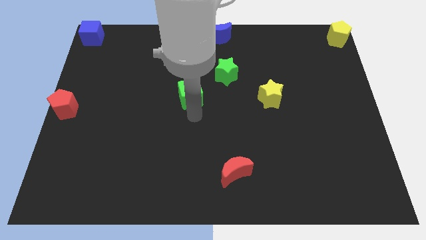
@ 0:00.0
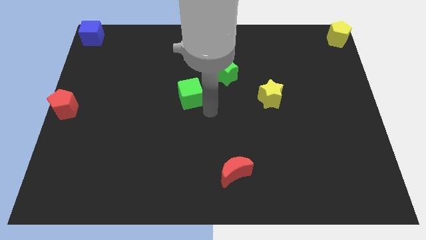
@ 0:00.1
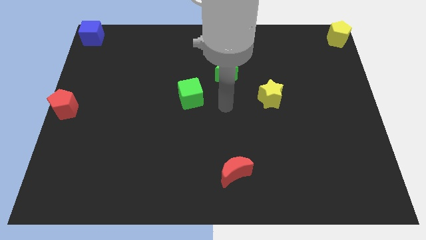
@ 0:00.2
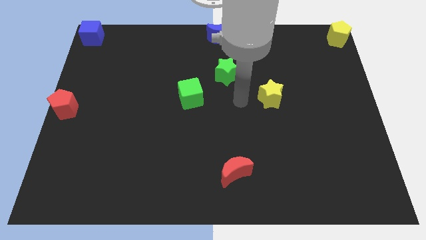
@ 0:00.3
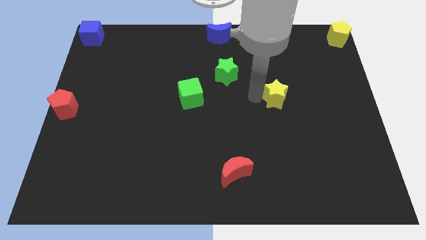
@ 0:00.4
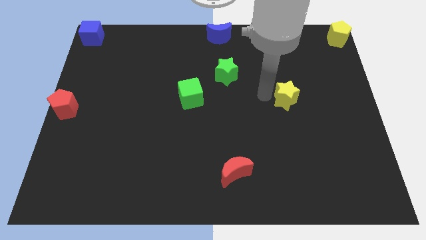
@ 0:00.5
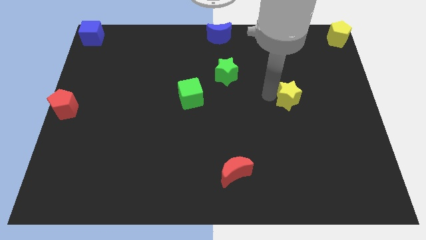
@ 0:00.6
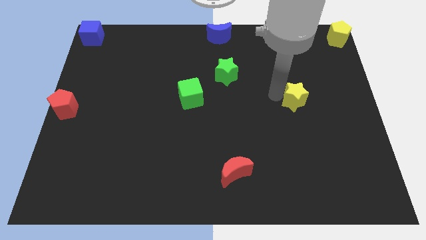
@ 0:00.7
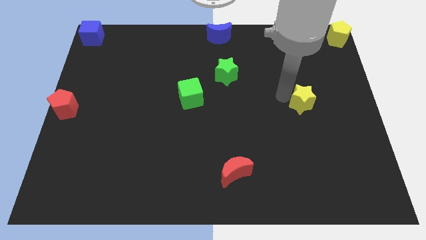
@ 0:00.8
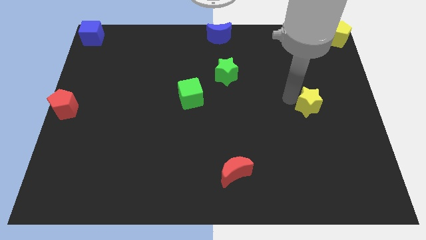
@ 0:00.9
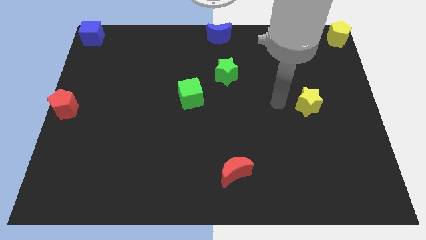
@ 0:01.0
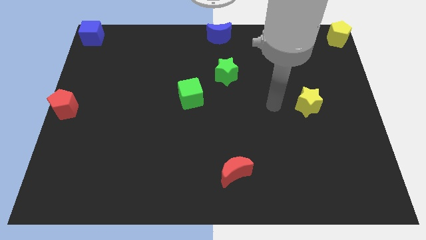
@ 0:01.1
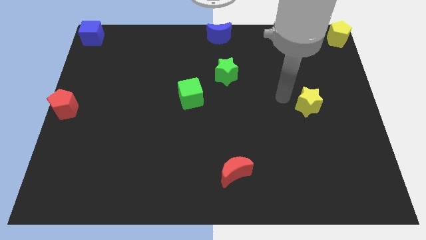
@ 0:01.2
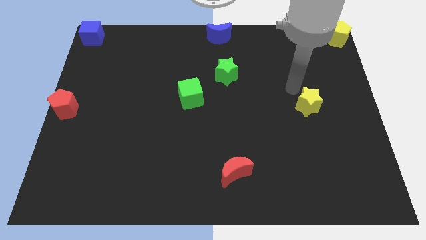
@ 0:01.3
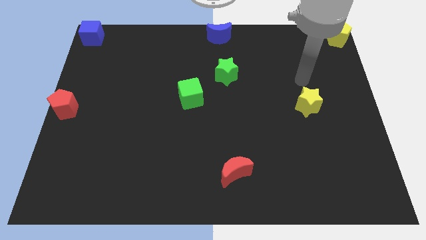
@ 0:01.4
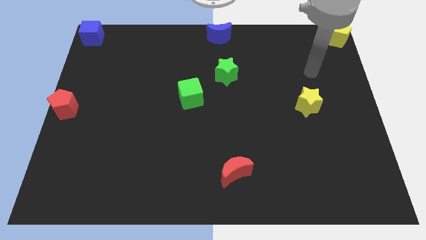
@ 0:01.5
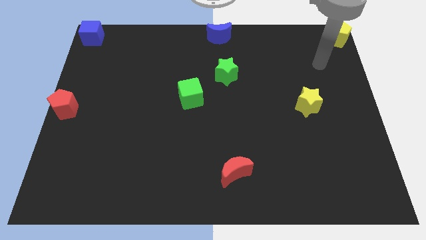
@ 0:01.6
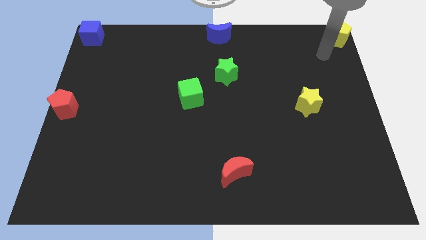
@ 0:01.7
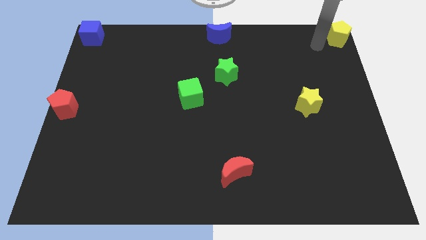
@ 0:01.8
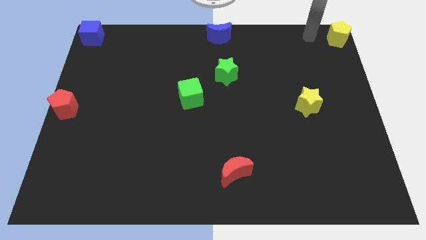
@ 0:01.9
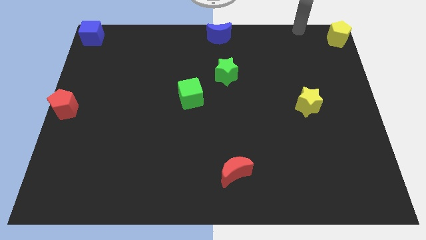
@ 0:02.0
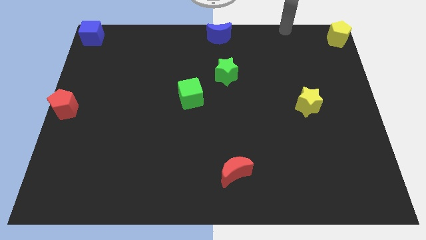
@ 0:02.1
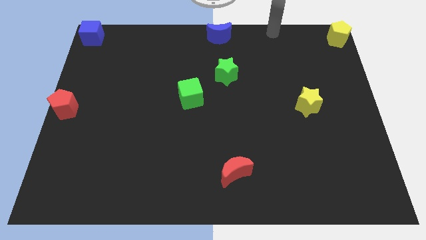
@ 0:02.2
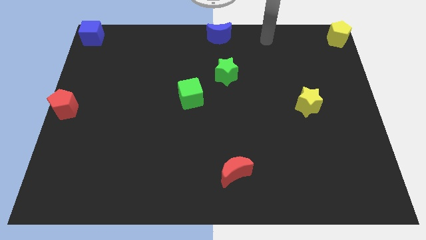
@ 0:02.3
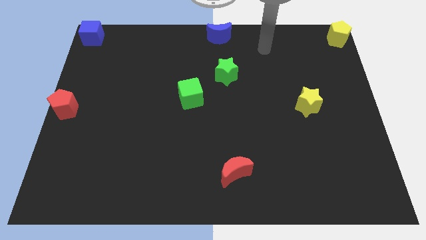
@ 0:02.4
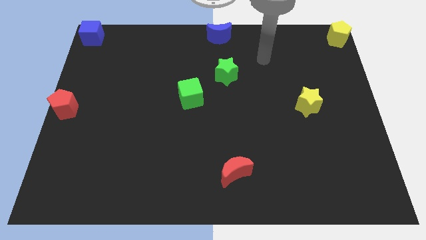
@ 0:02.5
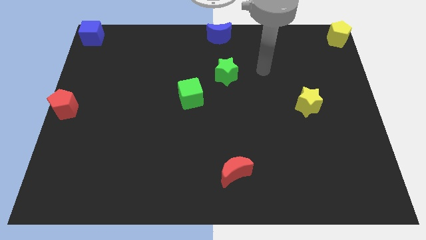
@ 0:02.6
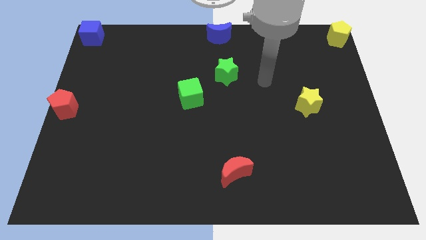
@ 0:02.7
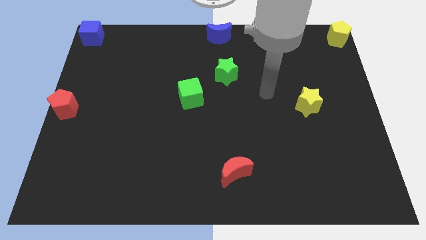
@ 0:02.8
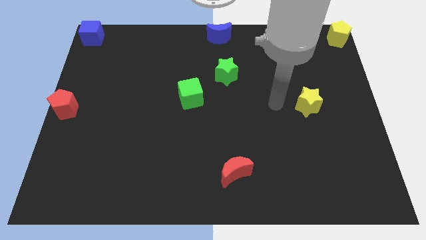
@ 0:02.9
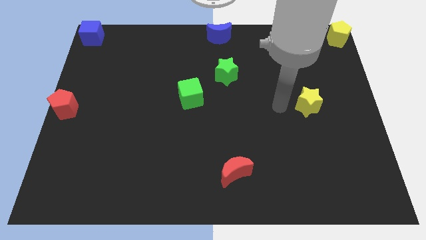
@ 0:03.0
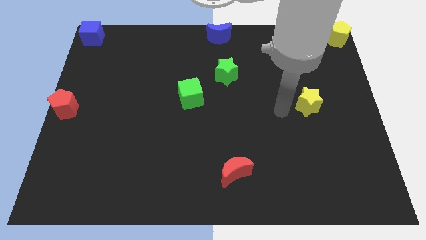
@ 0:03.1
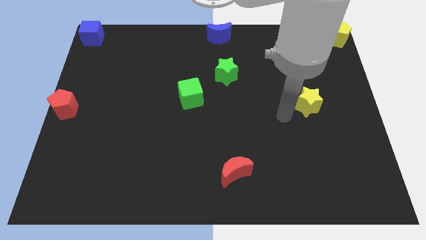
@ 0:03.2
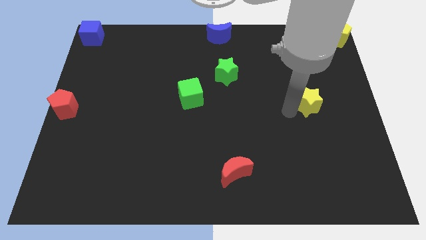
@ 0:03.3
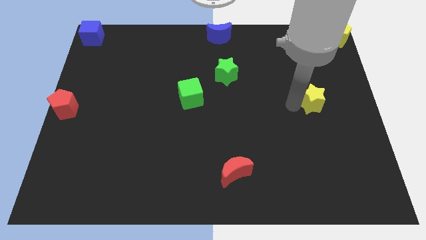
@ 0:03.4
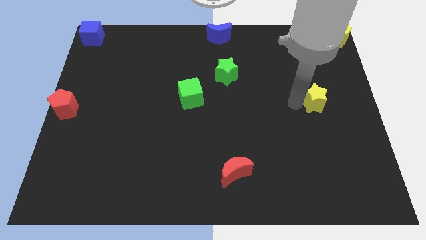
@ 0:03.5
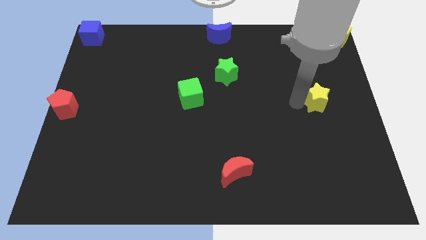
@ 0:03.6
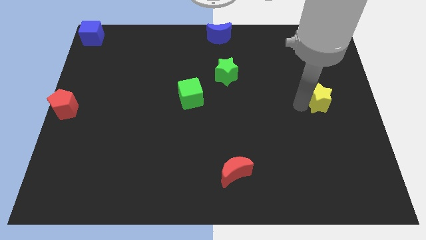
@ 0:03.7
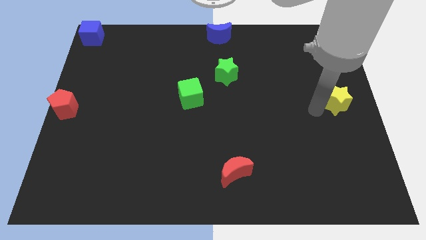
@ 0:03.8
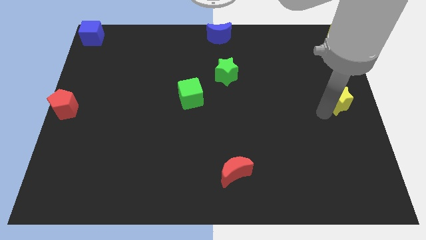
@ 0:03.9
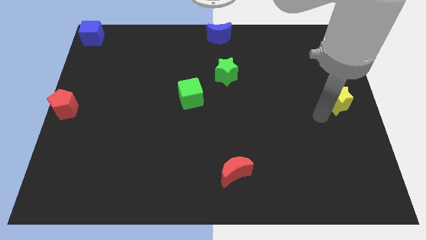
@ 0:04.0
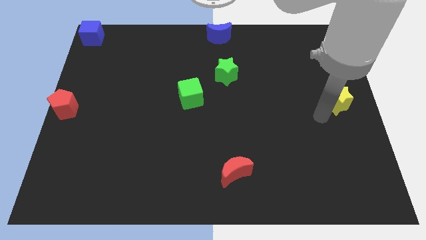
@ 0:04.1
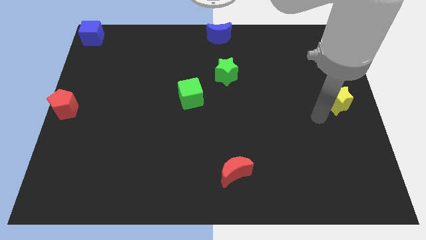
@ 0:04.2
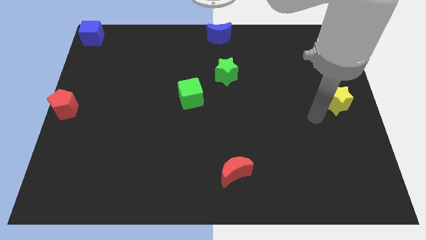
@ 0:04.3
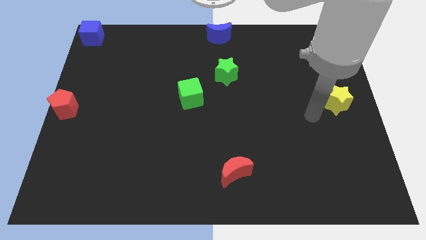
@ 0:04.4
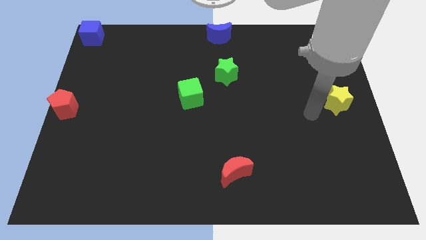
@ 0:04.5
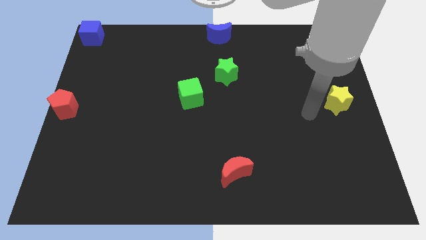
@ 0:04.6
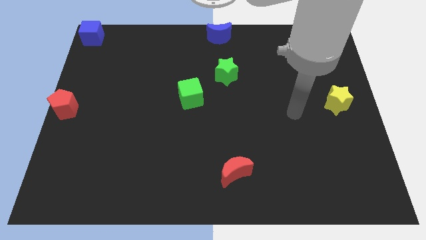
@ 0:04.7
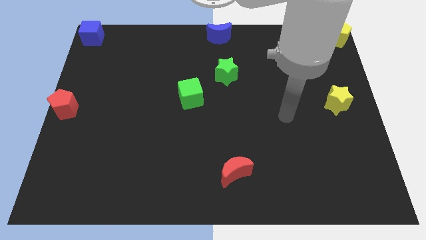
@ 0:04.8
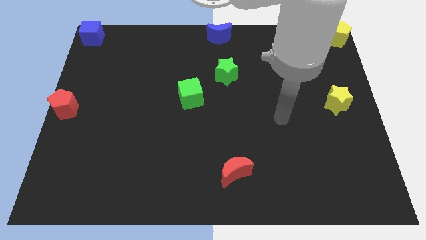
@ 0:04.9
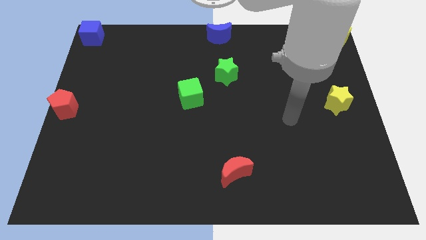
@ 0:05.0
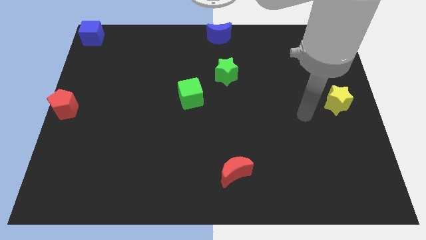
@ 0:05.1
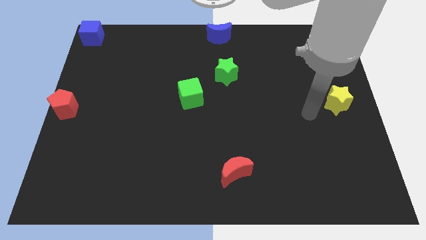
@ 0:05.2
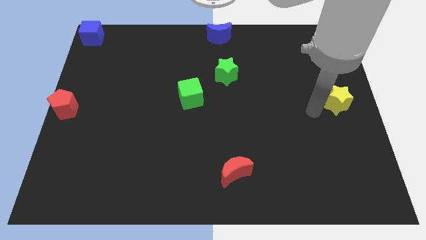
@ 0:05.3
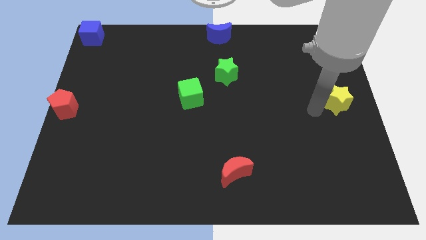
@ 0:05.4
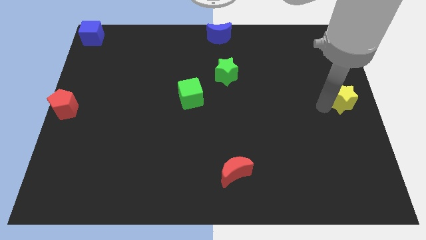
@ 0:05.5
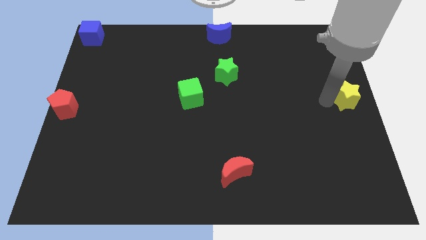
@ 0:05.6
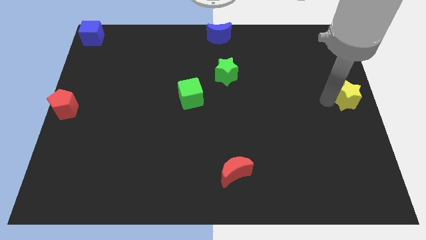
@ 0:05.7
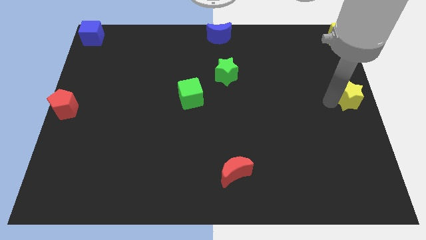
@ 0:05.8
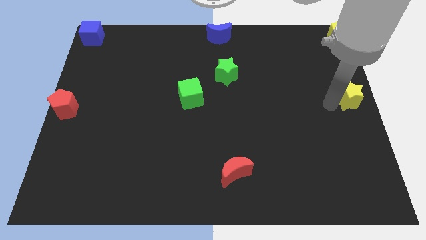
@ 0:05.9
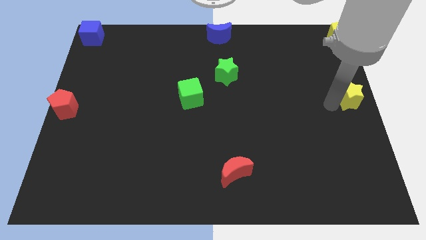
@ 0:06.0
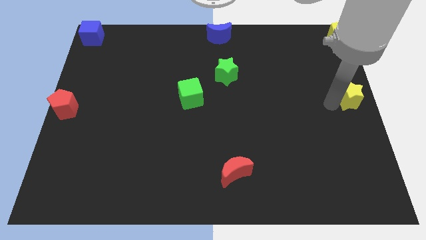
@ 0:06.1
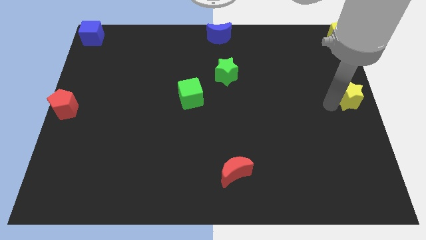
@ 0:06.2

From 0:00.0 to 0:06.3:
move the yellow star towards the center right of the board

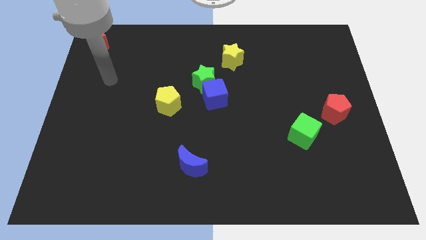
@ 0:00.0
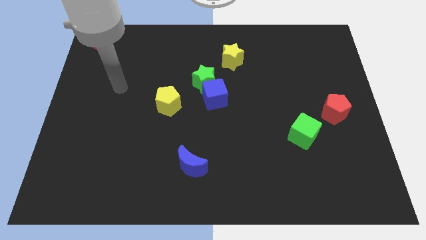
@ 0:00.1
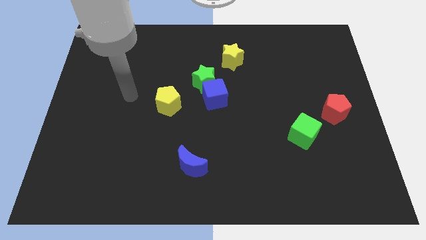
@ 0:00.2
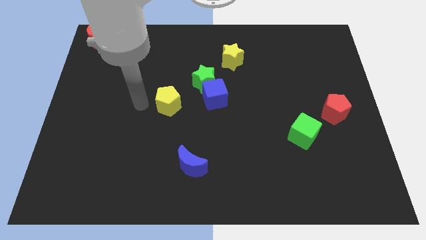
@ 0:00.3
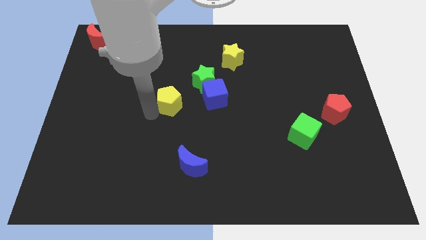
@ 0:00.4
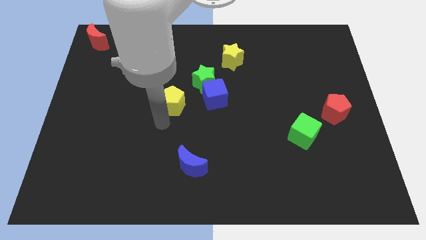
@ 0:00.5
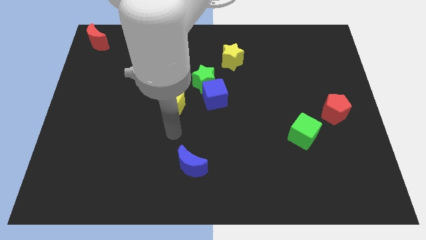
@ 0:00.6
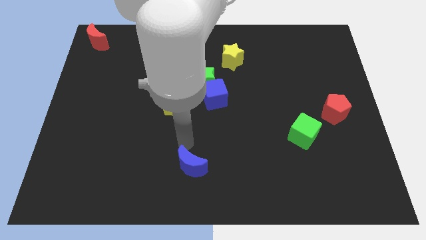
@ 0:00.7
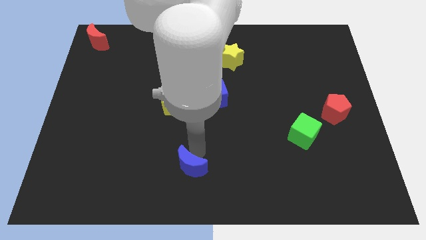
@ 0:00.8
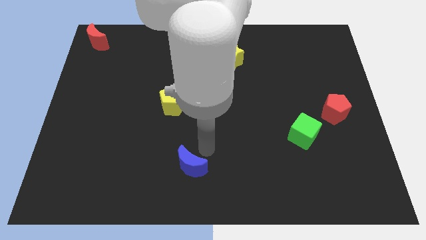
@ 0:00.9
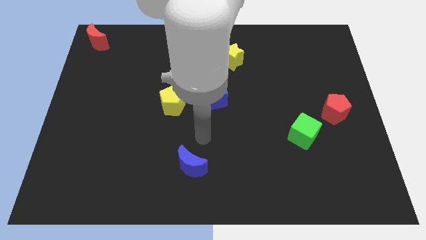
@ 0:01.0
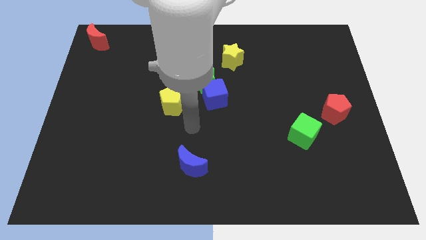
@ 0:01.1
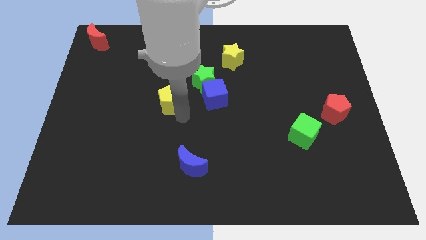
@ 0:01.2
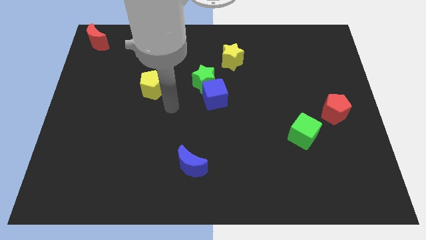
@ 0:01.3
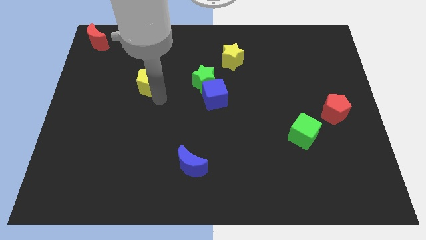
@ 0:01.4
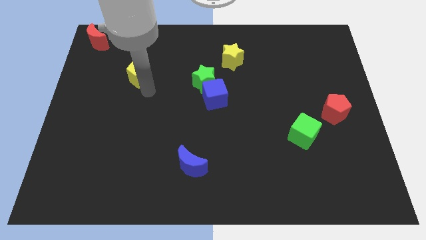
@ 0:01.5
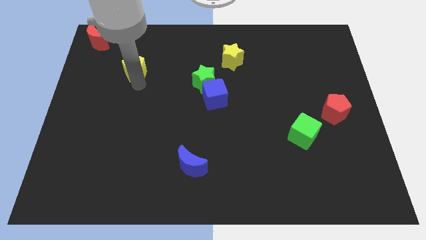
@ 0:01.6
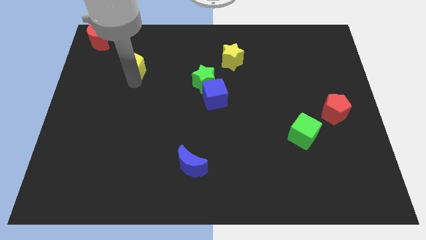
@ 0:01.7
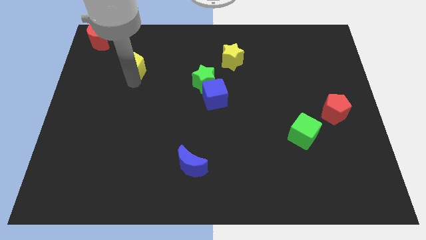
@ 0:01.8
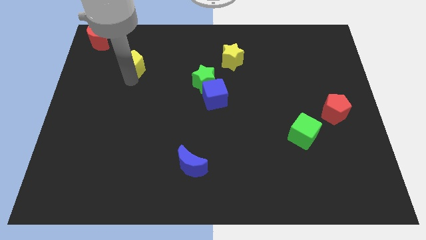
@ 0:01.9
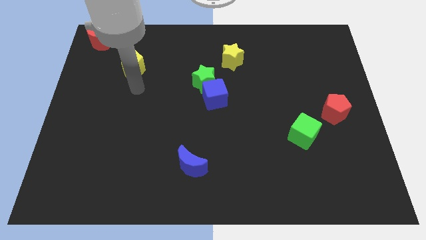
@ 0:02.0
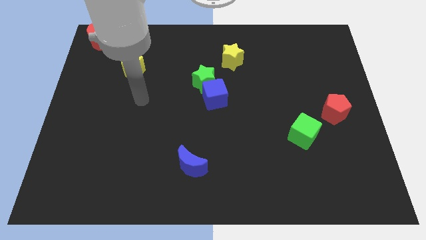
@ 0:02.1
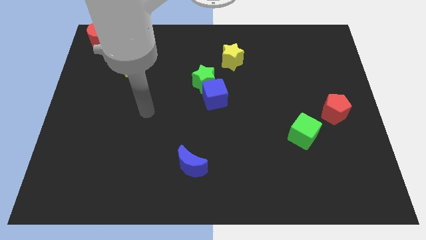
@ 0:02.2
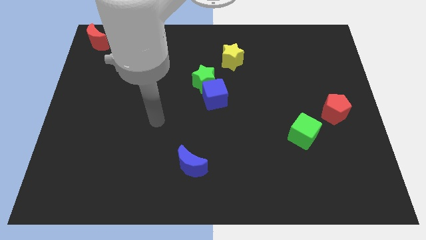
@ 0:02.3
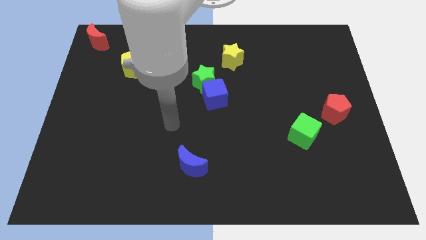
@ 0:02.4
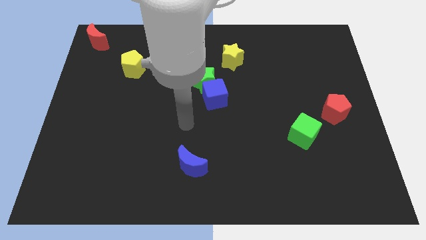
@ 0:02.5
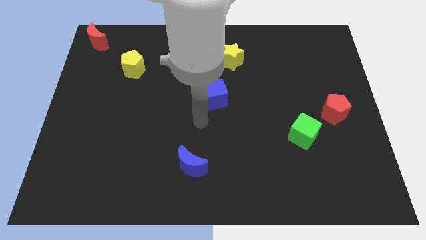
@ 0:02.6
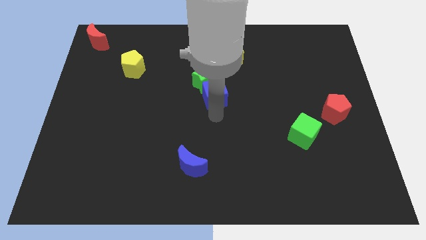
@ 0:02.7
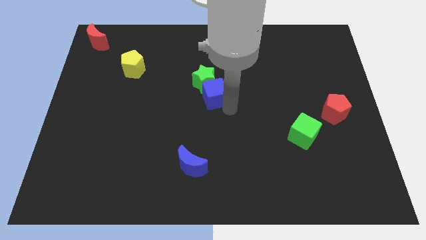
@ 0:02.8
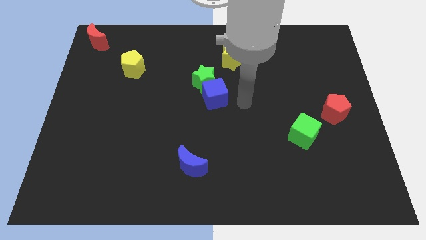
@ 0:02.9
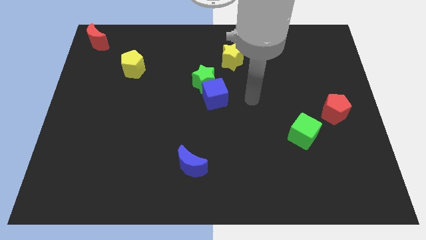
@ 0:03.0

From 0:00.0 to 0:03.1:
place the yellow pentagon diagonally to red moon
